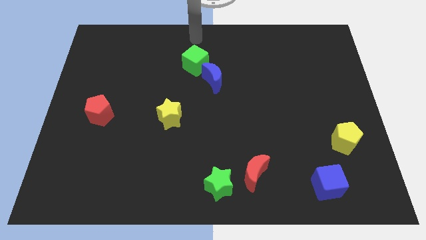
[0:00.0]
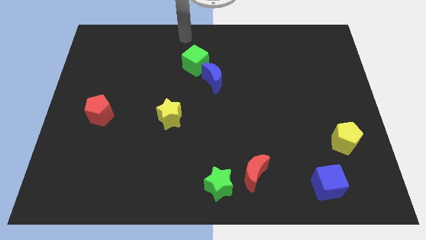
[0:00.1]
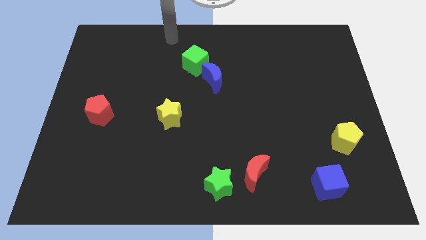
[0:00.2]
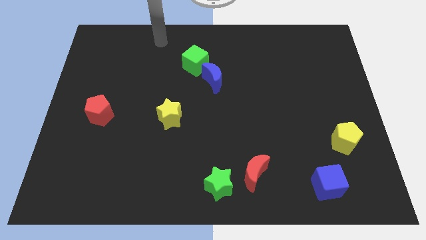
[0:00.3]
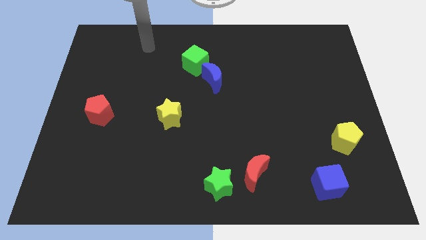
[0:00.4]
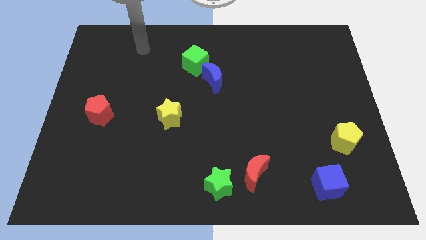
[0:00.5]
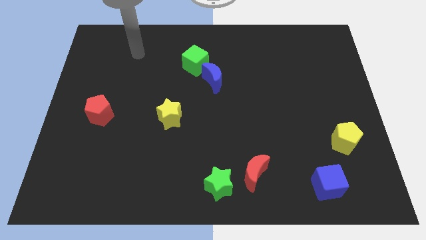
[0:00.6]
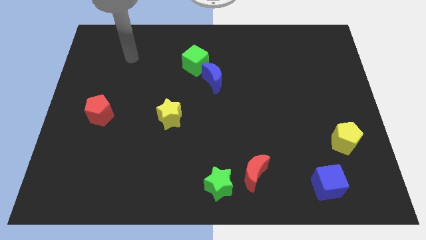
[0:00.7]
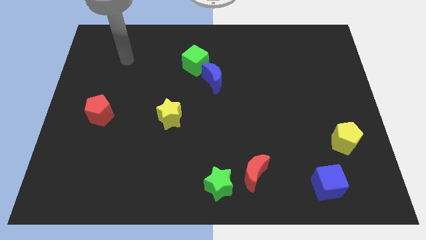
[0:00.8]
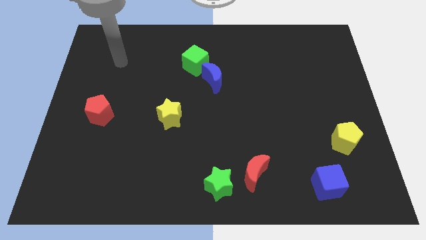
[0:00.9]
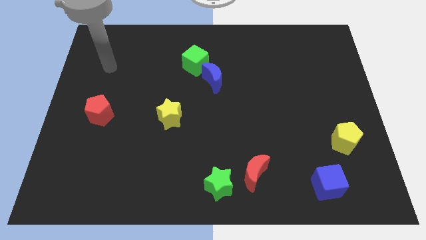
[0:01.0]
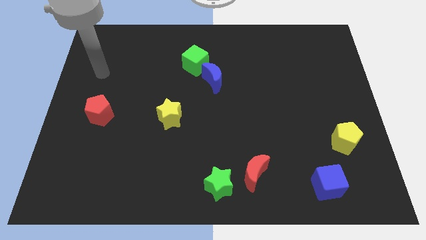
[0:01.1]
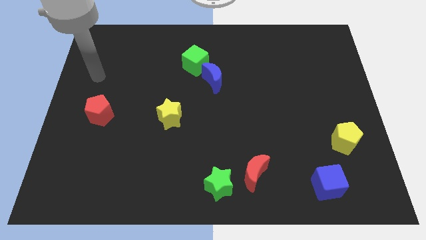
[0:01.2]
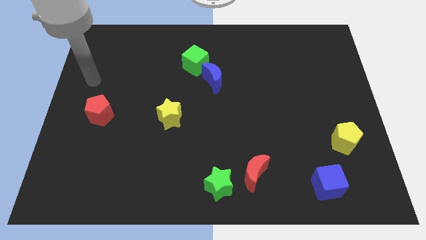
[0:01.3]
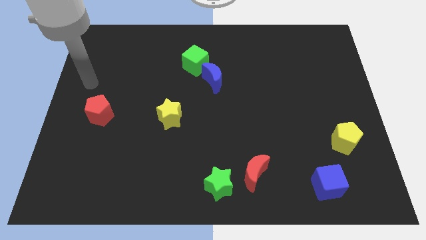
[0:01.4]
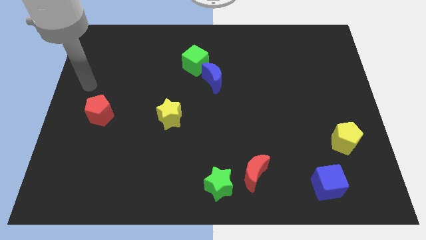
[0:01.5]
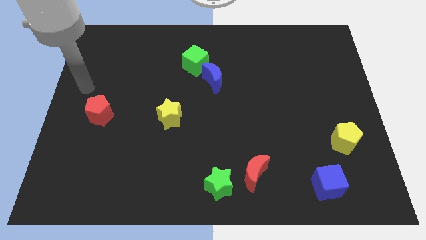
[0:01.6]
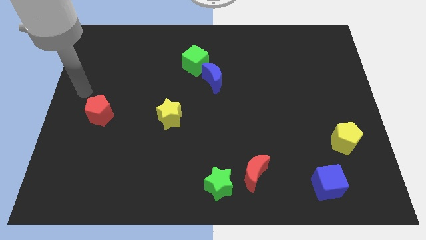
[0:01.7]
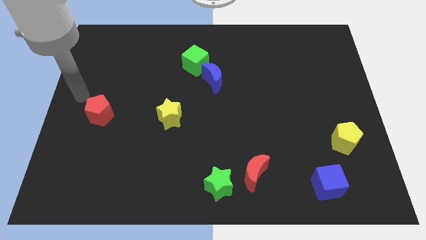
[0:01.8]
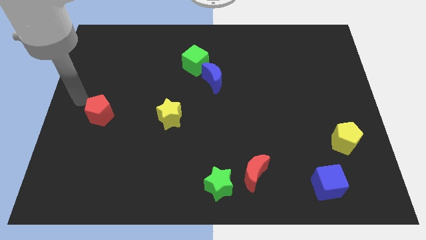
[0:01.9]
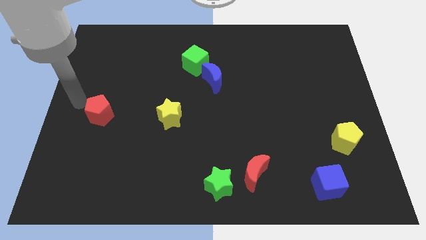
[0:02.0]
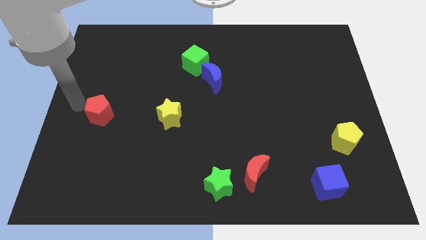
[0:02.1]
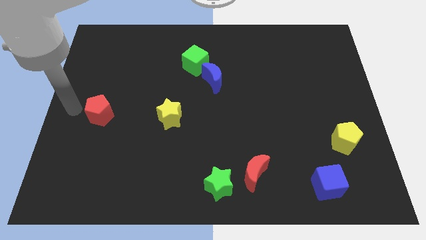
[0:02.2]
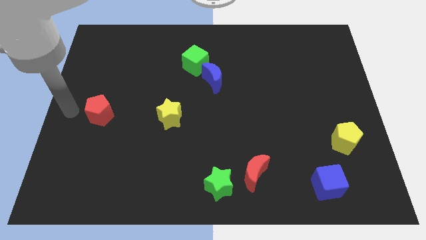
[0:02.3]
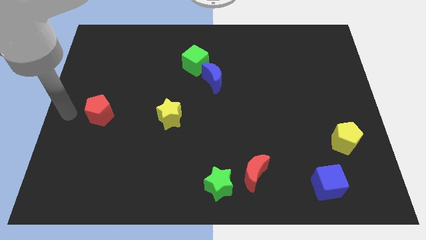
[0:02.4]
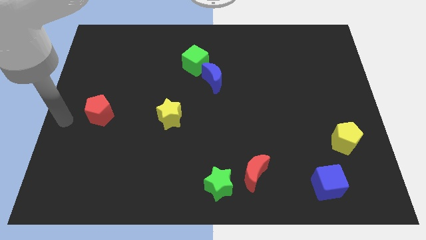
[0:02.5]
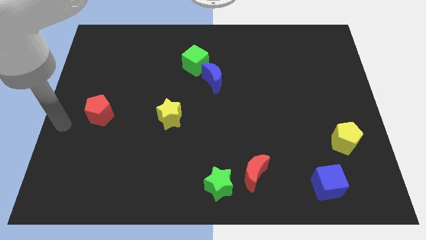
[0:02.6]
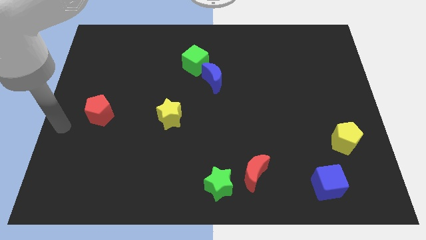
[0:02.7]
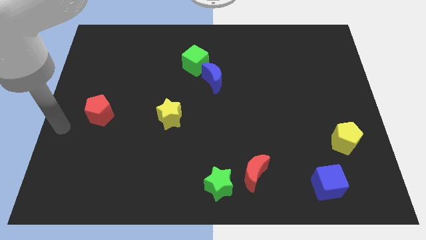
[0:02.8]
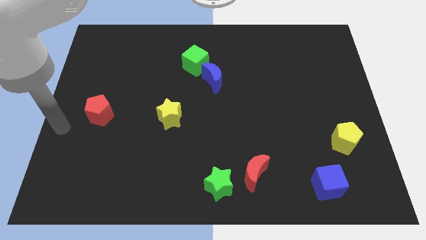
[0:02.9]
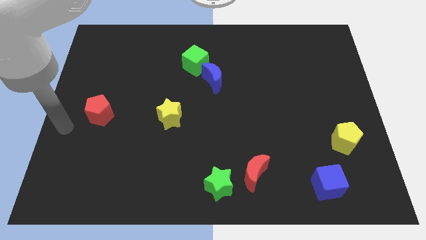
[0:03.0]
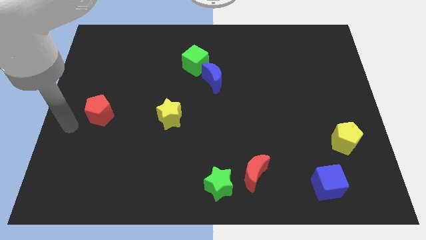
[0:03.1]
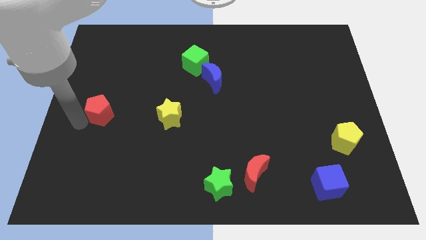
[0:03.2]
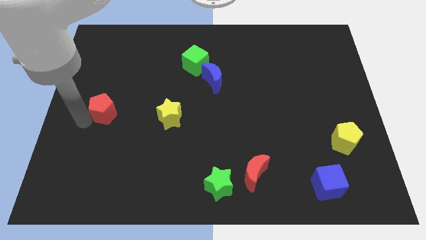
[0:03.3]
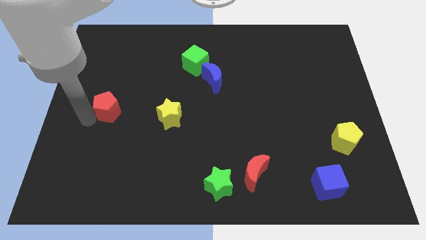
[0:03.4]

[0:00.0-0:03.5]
touch the bottom of red pentagon

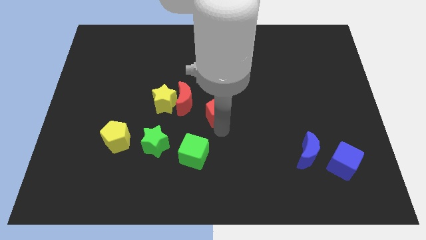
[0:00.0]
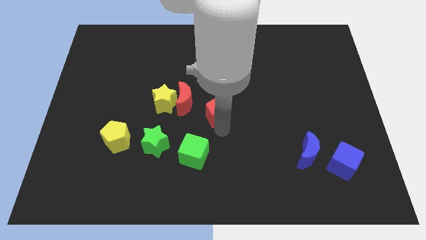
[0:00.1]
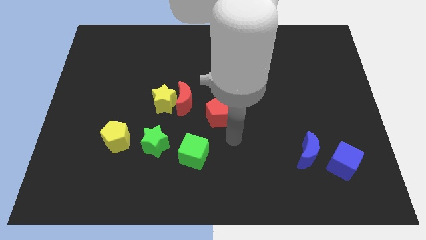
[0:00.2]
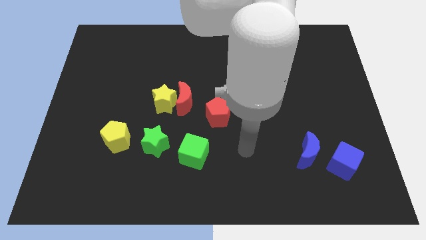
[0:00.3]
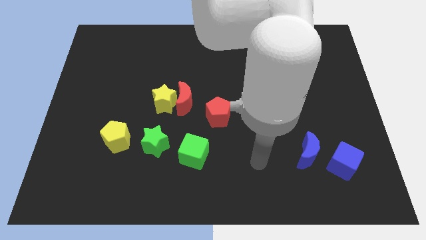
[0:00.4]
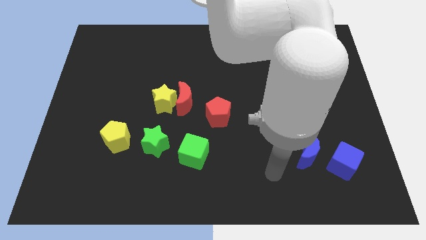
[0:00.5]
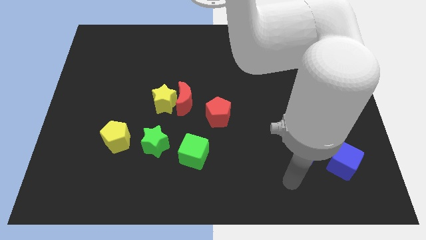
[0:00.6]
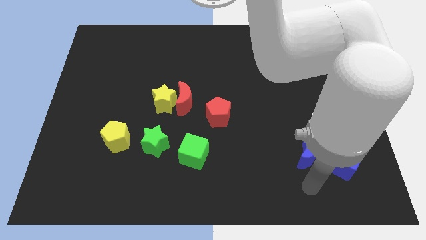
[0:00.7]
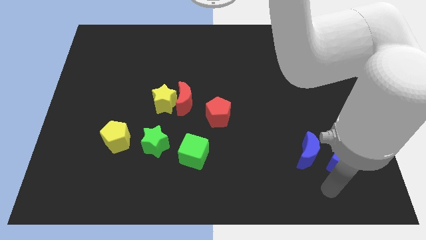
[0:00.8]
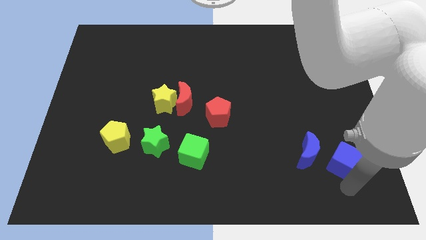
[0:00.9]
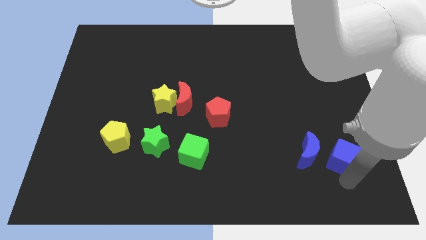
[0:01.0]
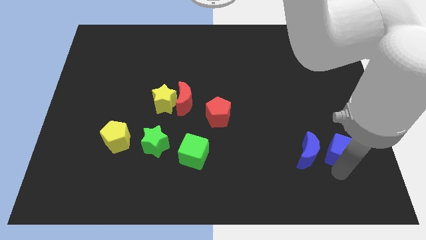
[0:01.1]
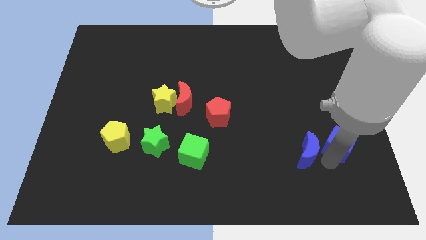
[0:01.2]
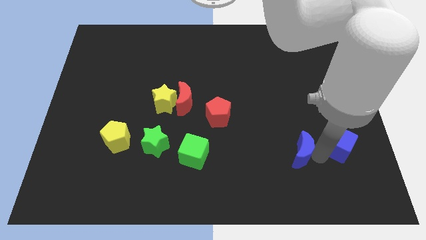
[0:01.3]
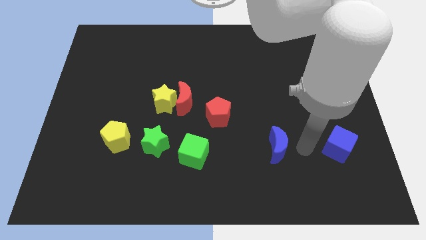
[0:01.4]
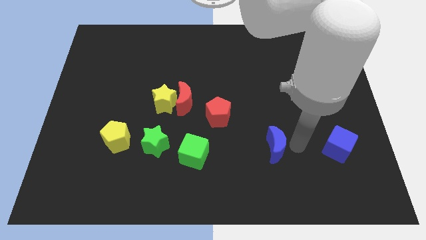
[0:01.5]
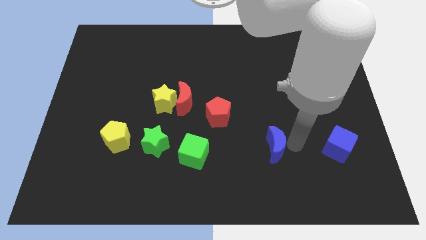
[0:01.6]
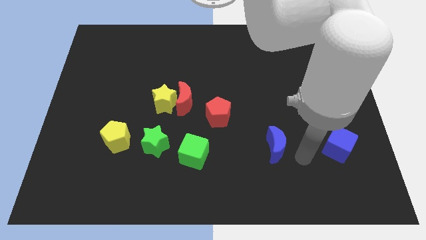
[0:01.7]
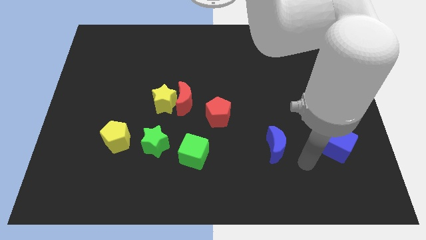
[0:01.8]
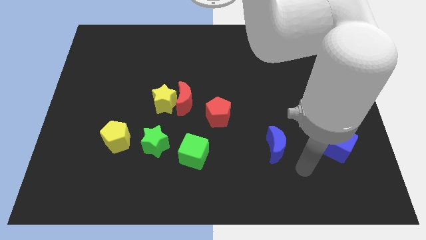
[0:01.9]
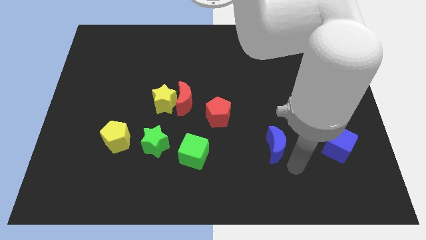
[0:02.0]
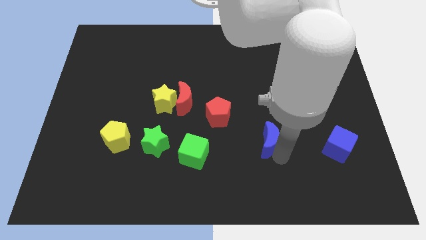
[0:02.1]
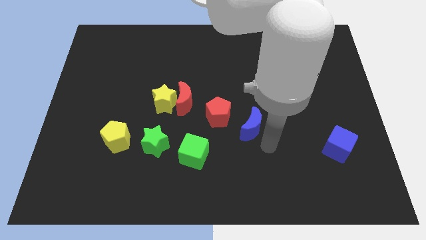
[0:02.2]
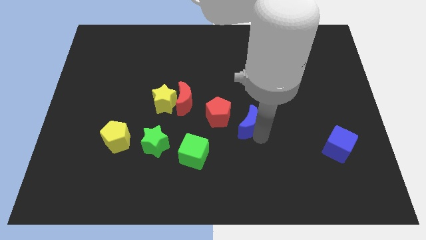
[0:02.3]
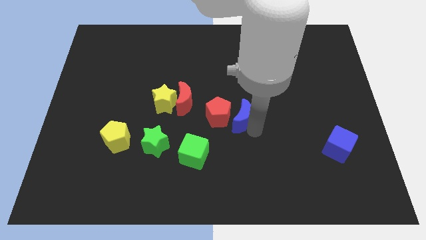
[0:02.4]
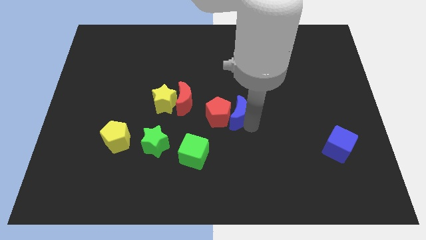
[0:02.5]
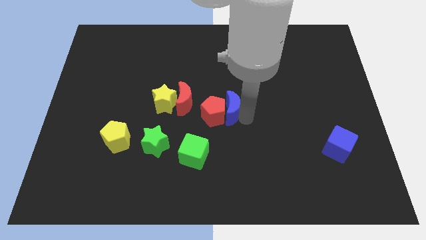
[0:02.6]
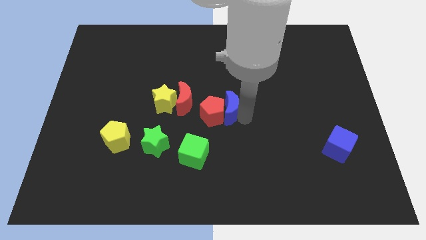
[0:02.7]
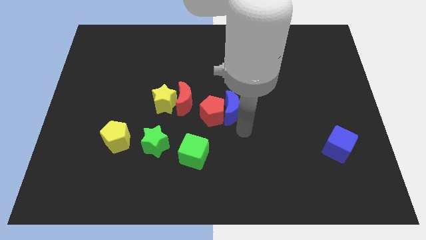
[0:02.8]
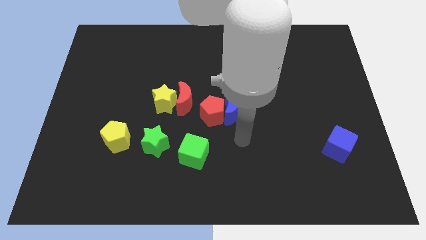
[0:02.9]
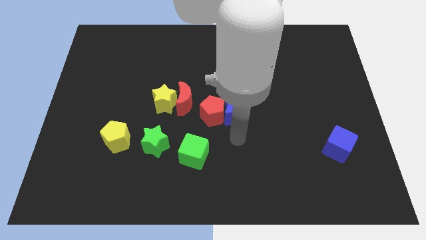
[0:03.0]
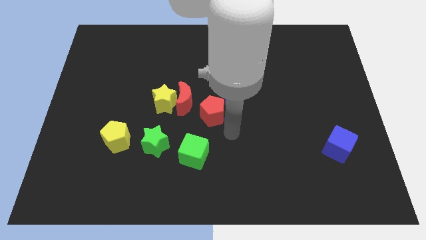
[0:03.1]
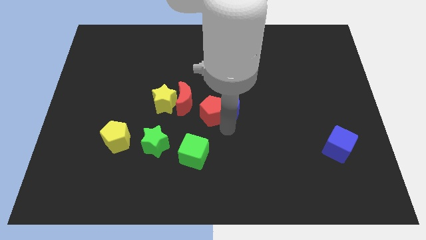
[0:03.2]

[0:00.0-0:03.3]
place the blue crescentat the right side of the red pentagon

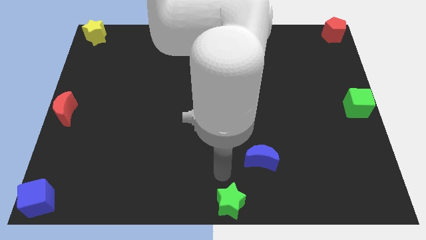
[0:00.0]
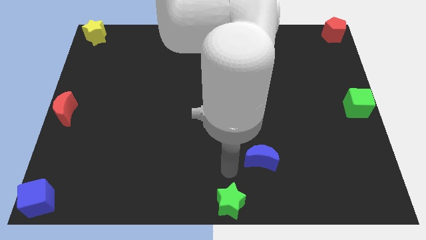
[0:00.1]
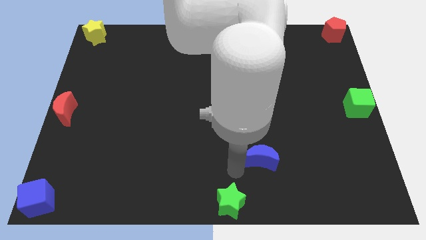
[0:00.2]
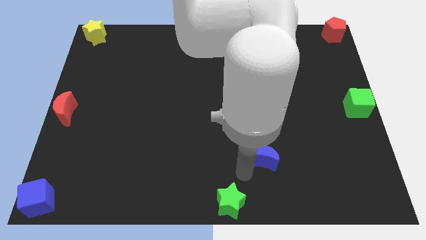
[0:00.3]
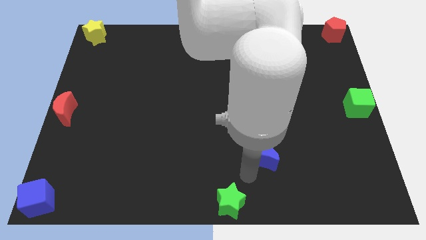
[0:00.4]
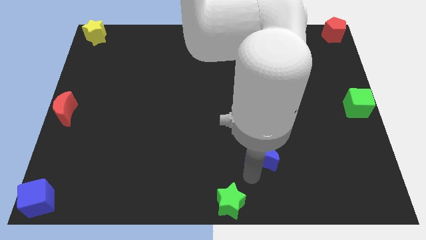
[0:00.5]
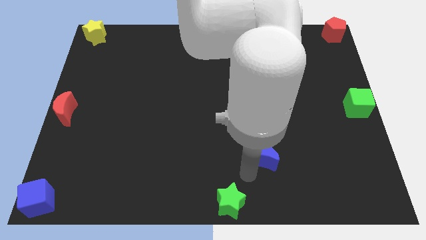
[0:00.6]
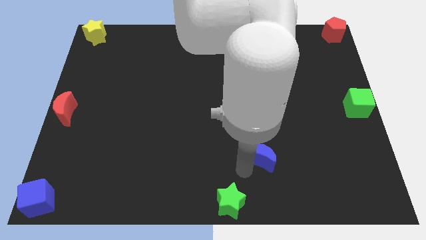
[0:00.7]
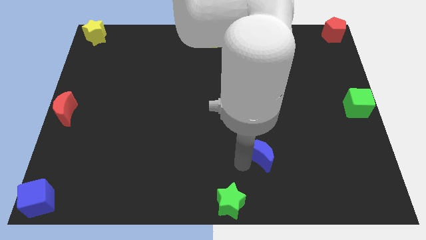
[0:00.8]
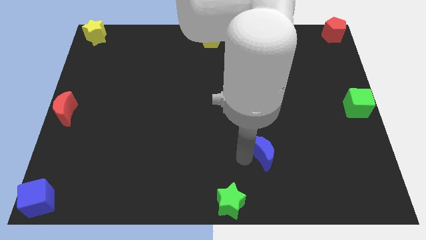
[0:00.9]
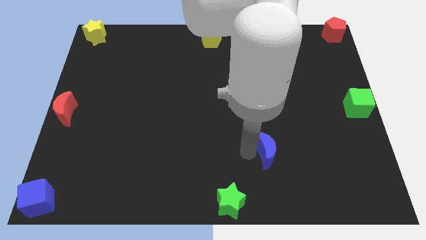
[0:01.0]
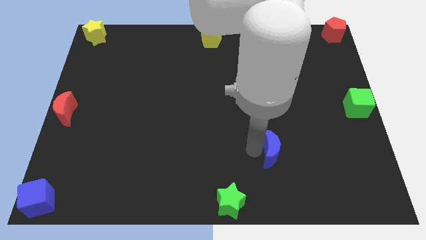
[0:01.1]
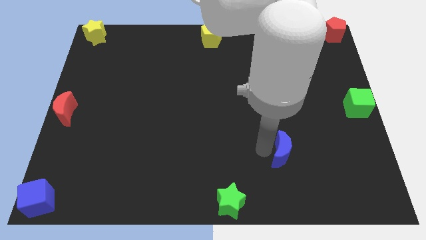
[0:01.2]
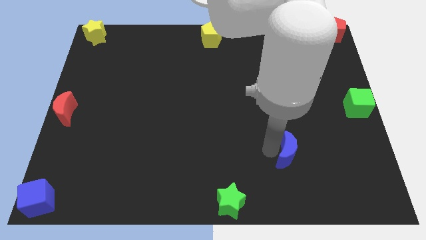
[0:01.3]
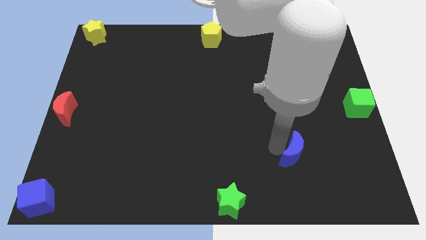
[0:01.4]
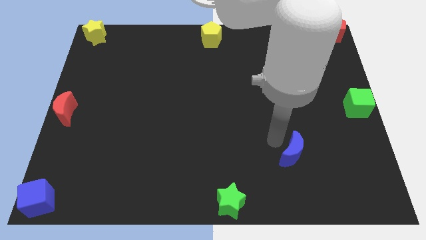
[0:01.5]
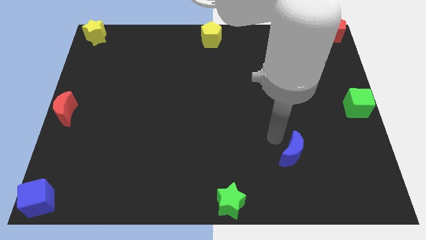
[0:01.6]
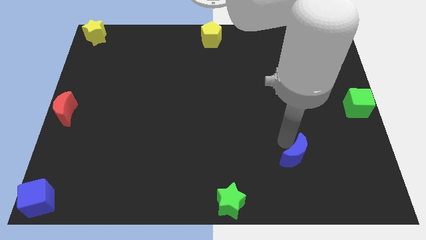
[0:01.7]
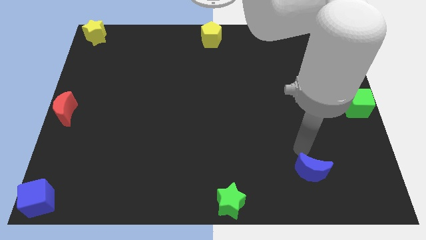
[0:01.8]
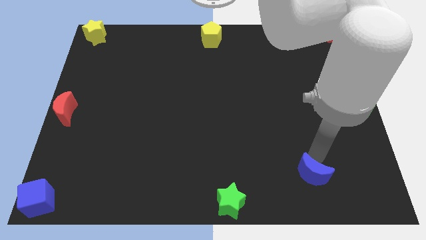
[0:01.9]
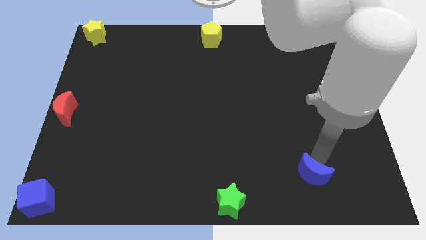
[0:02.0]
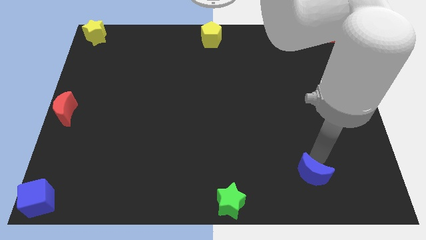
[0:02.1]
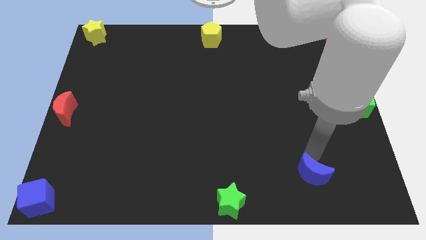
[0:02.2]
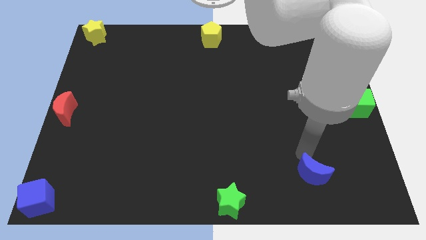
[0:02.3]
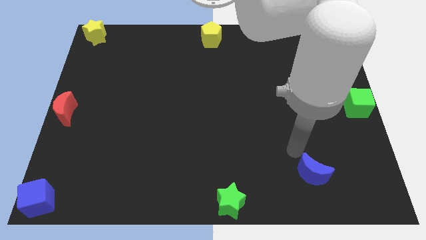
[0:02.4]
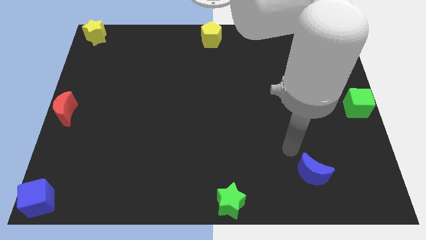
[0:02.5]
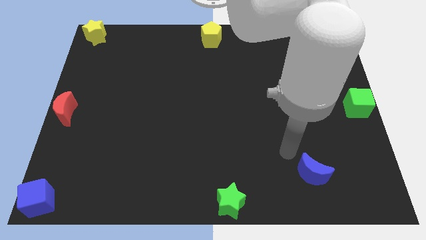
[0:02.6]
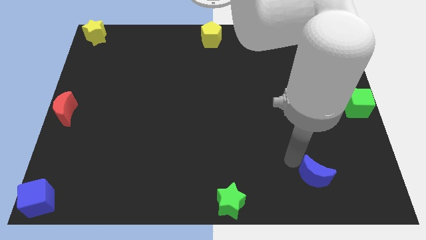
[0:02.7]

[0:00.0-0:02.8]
move the blue crescent towards the right
